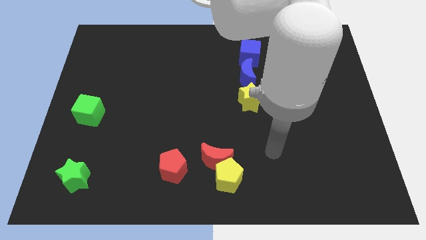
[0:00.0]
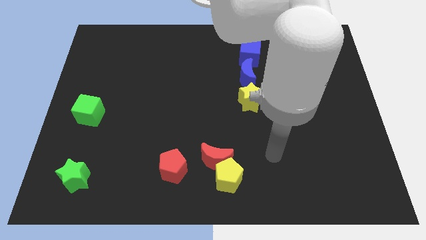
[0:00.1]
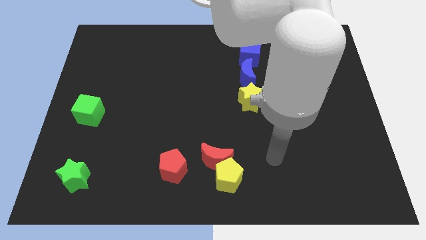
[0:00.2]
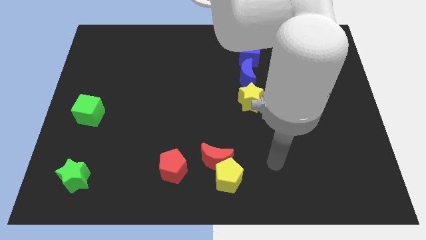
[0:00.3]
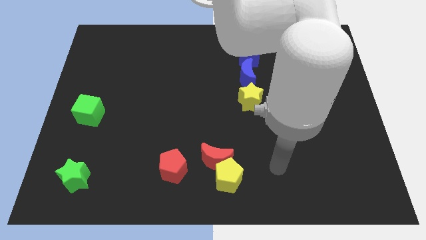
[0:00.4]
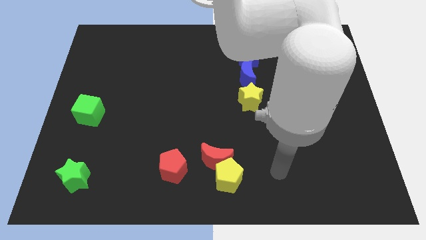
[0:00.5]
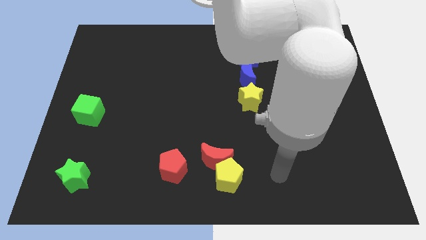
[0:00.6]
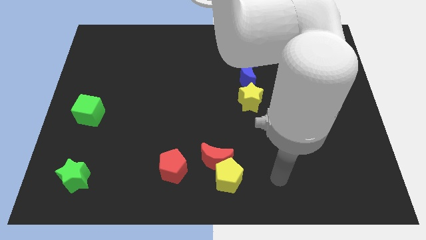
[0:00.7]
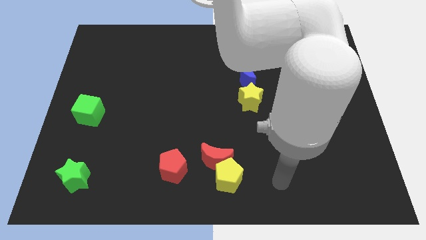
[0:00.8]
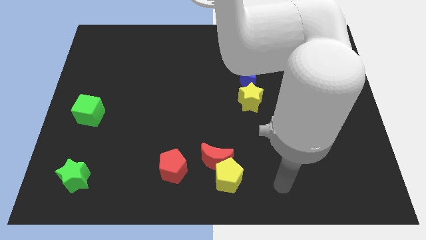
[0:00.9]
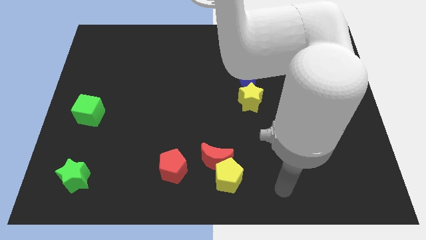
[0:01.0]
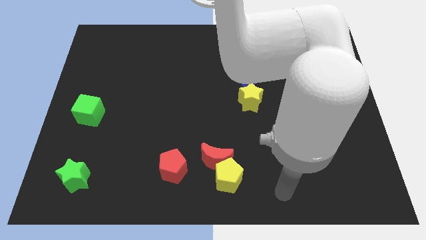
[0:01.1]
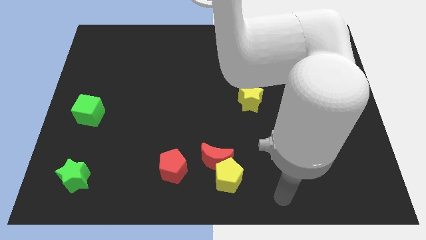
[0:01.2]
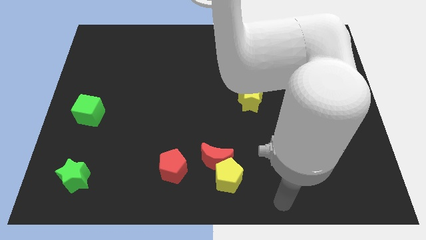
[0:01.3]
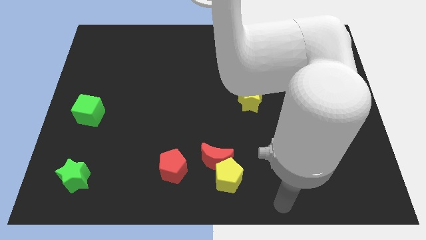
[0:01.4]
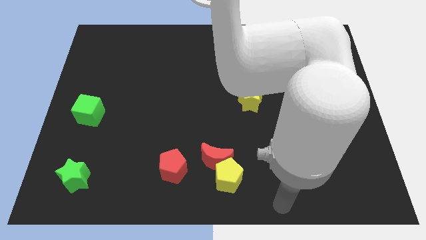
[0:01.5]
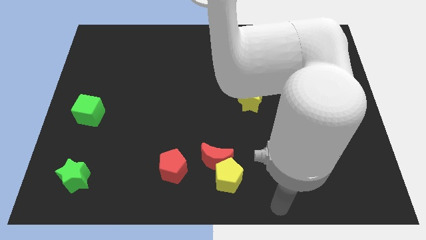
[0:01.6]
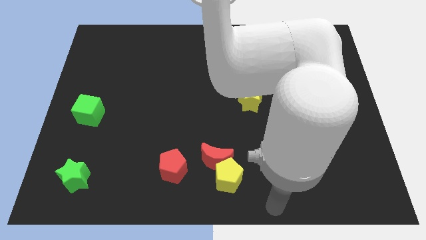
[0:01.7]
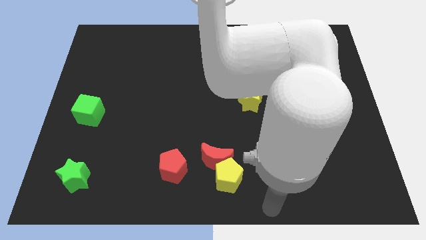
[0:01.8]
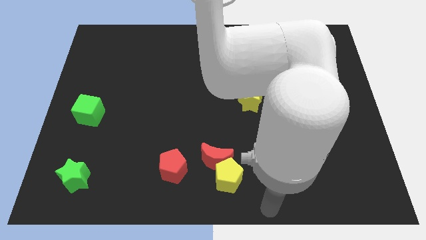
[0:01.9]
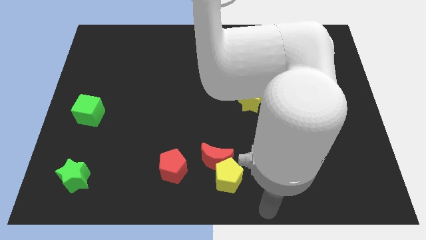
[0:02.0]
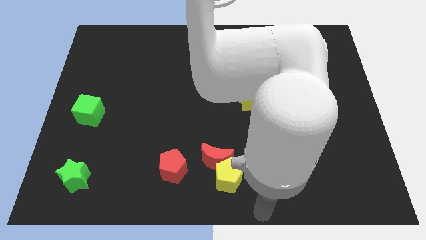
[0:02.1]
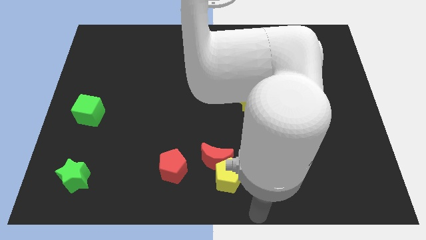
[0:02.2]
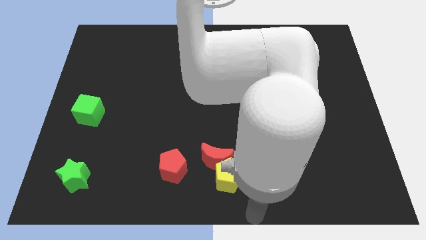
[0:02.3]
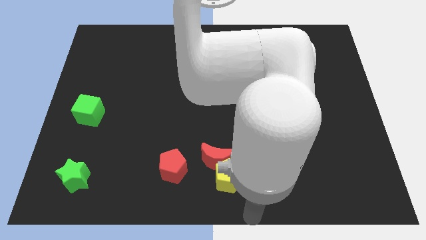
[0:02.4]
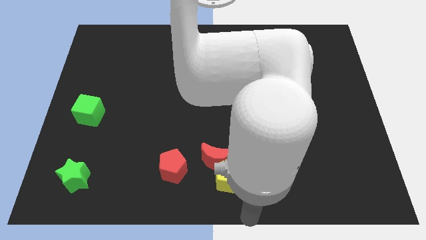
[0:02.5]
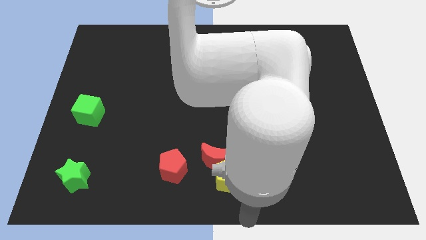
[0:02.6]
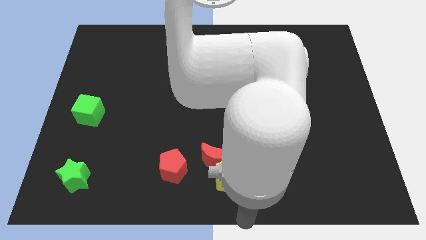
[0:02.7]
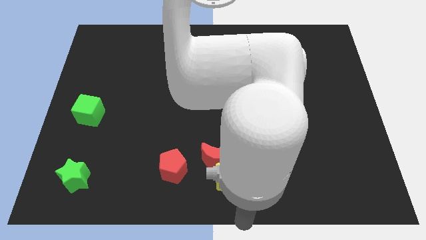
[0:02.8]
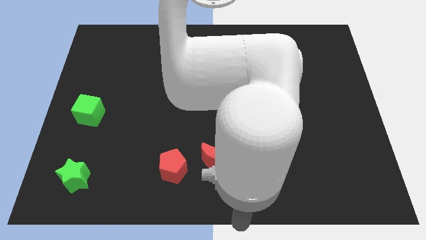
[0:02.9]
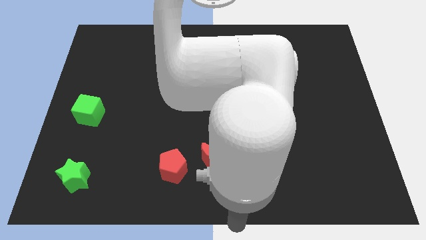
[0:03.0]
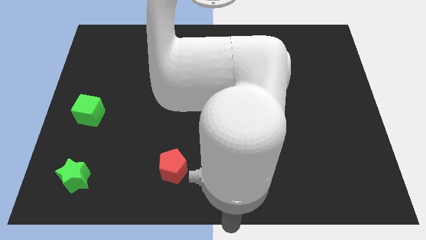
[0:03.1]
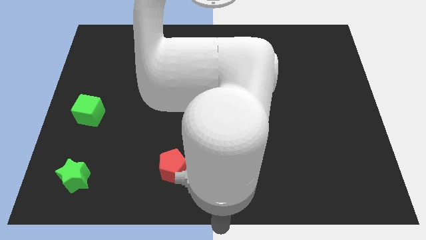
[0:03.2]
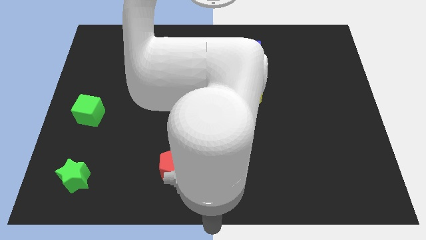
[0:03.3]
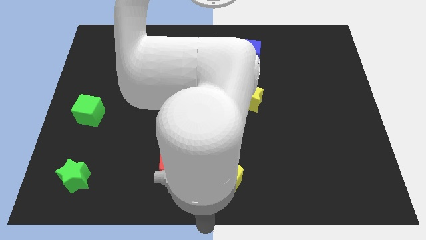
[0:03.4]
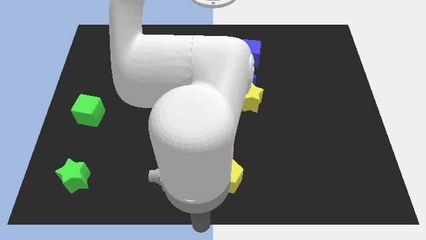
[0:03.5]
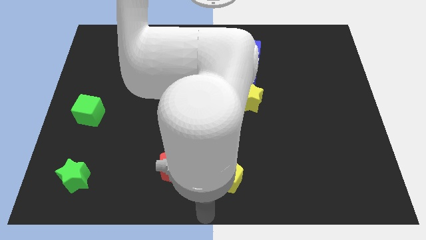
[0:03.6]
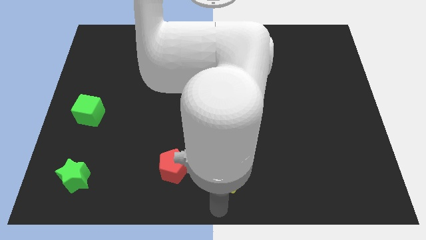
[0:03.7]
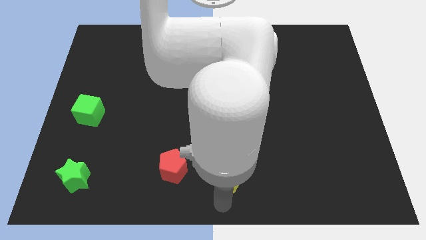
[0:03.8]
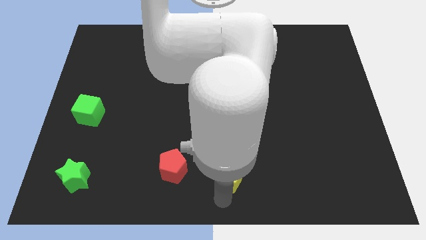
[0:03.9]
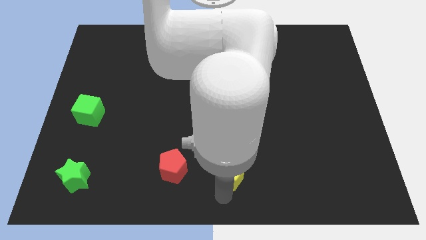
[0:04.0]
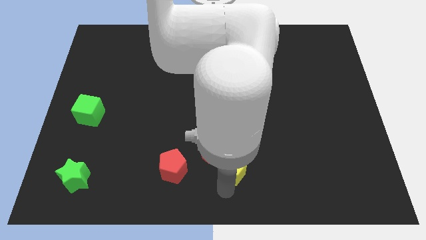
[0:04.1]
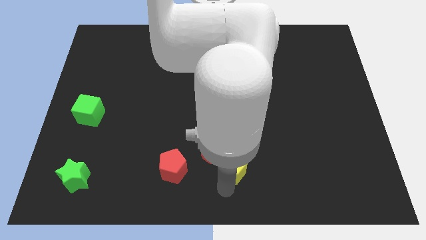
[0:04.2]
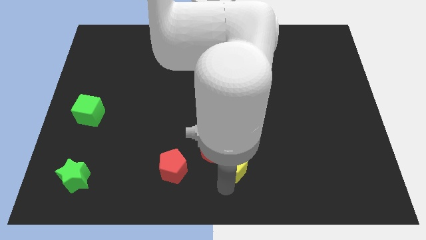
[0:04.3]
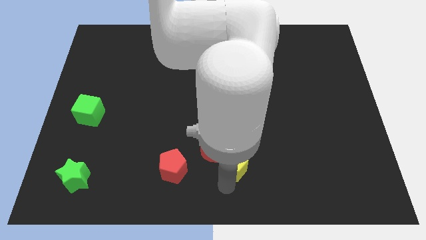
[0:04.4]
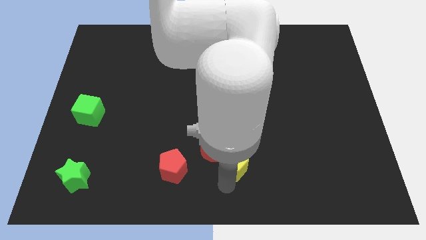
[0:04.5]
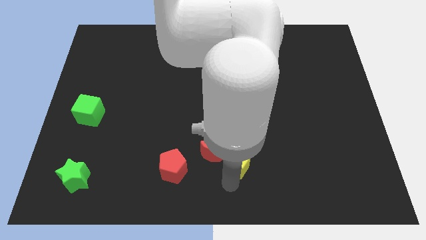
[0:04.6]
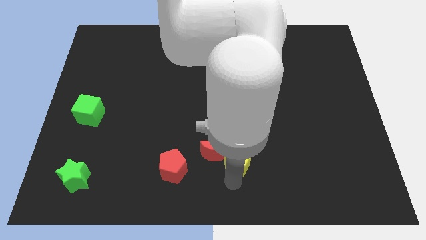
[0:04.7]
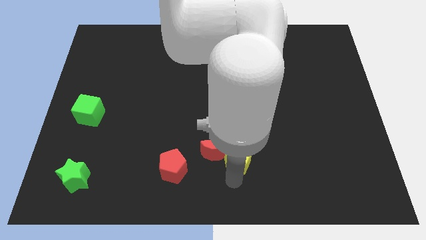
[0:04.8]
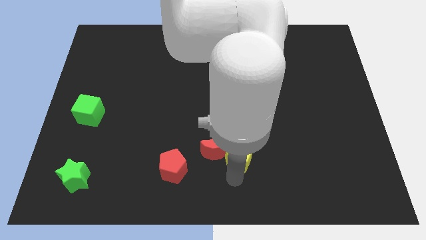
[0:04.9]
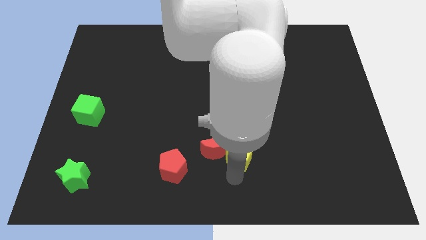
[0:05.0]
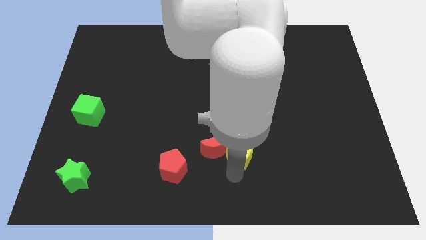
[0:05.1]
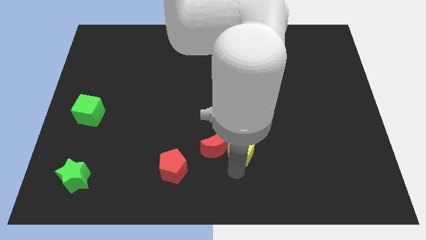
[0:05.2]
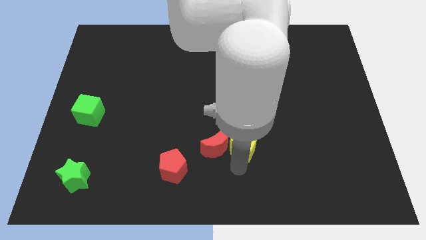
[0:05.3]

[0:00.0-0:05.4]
move the yellow pentagon to the right side of the red moon

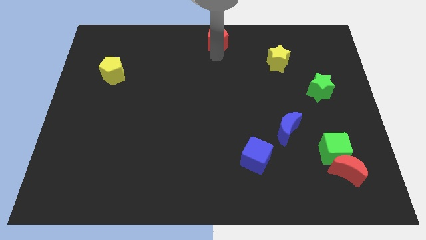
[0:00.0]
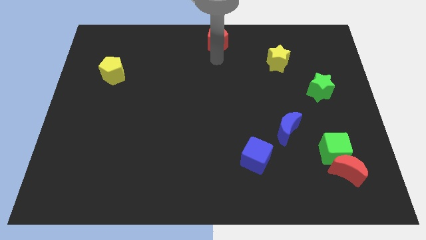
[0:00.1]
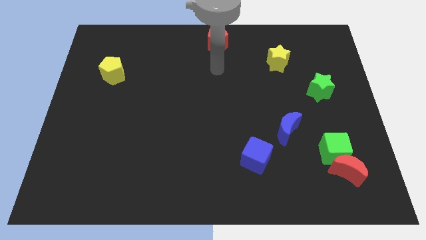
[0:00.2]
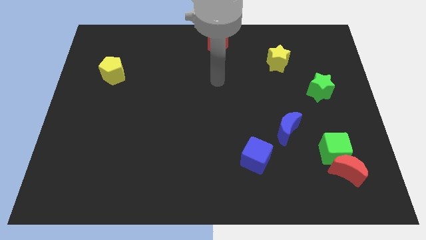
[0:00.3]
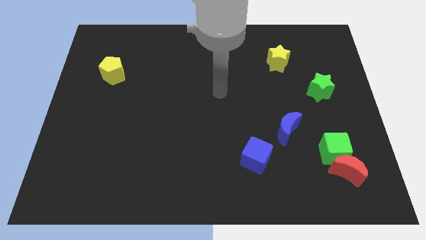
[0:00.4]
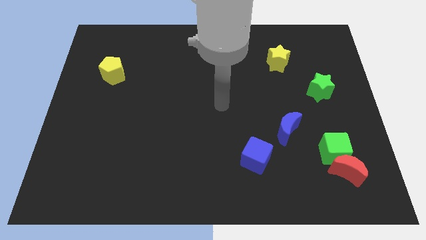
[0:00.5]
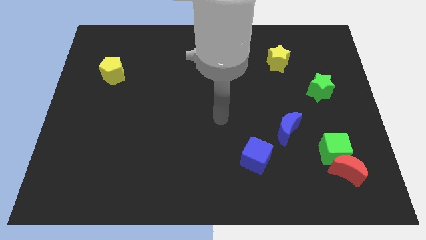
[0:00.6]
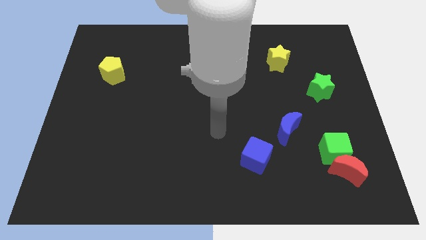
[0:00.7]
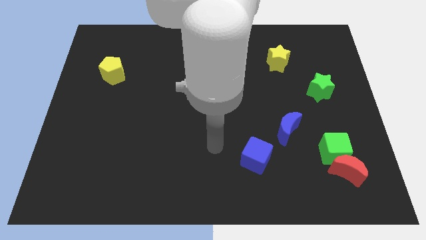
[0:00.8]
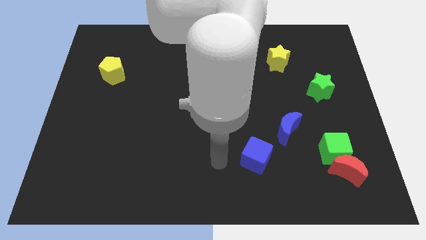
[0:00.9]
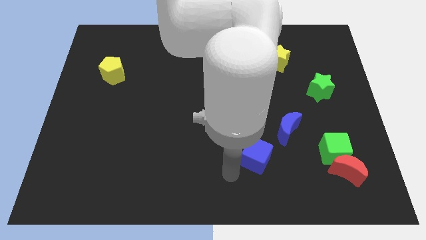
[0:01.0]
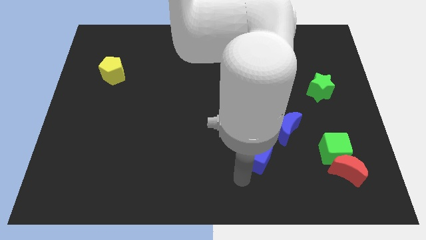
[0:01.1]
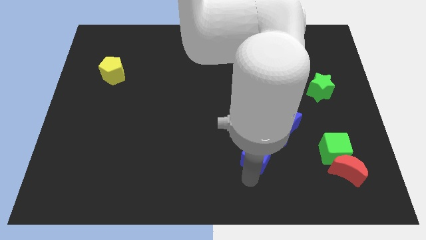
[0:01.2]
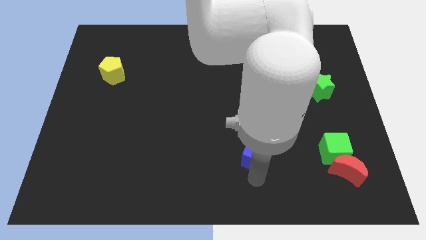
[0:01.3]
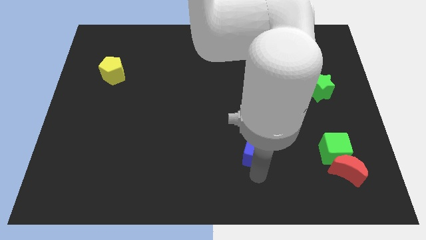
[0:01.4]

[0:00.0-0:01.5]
place your arm to the bottom of the blue cube

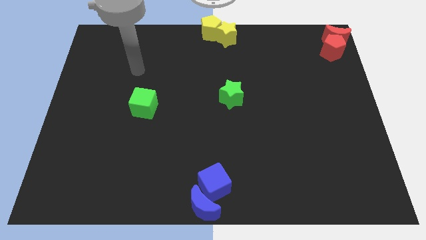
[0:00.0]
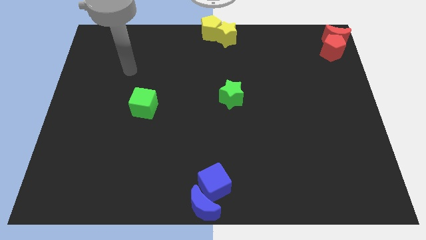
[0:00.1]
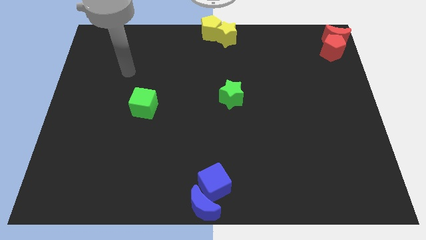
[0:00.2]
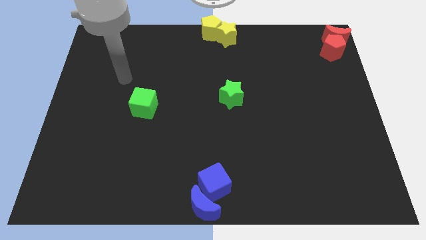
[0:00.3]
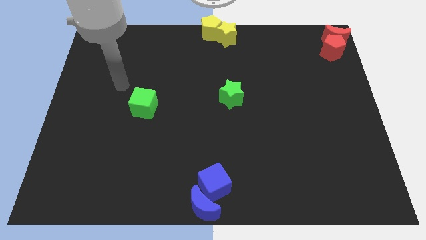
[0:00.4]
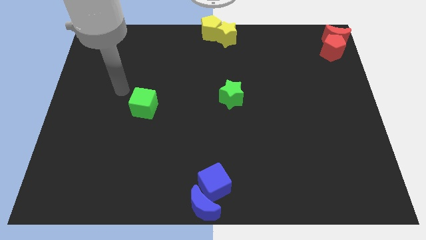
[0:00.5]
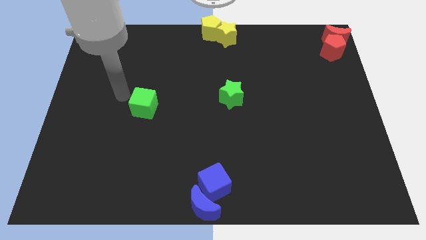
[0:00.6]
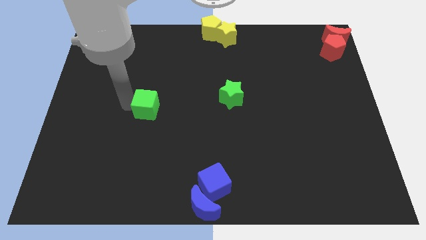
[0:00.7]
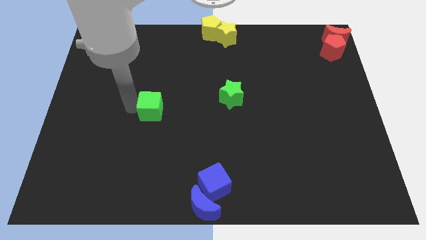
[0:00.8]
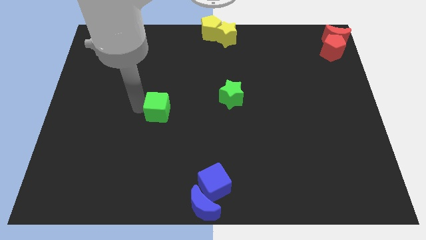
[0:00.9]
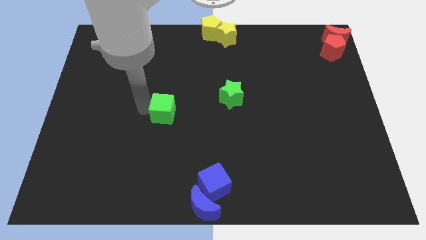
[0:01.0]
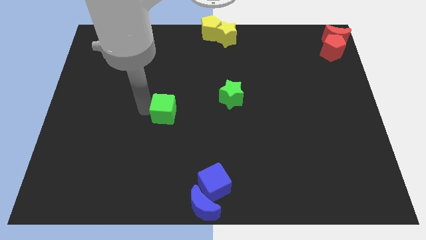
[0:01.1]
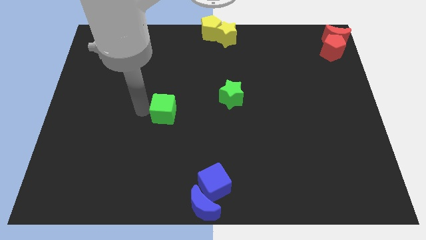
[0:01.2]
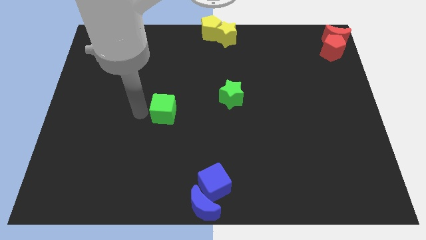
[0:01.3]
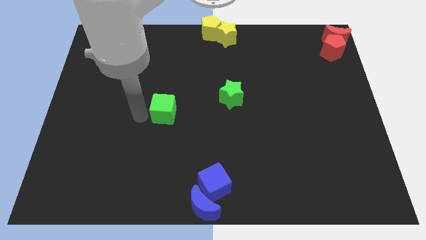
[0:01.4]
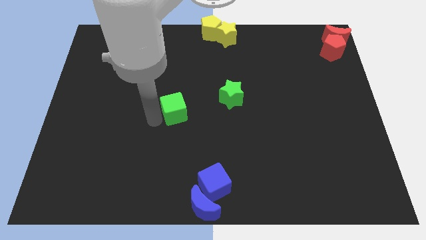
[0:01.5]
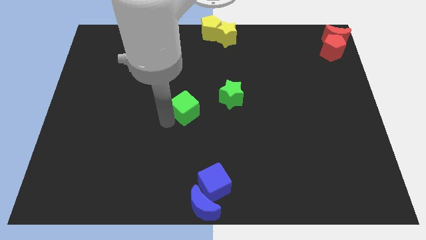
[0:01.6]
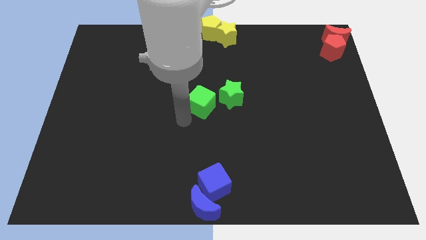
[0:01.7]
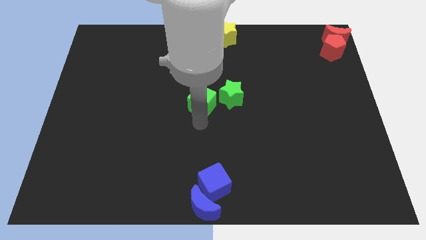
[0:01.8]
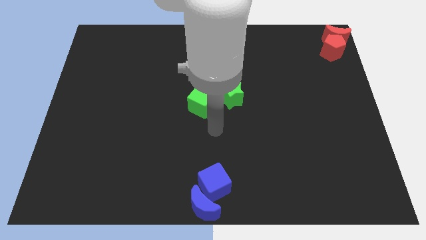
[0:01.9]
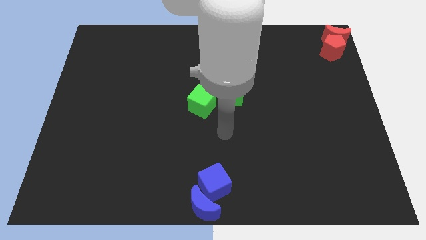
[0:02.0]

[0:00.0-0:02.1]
move the green cube to the left side of the green star

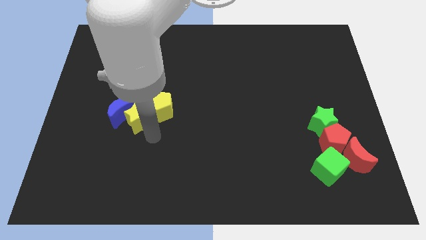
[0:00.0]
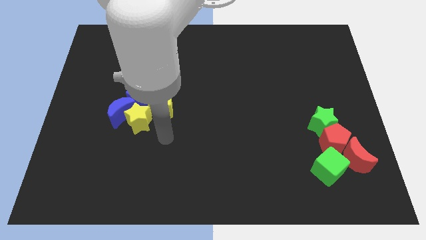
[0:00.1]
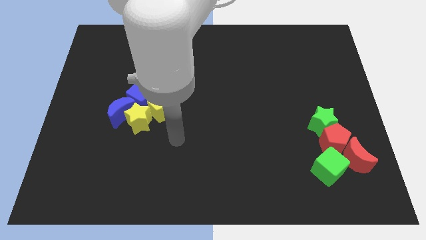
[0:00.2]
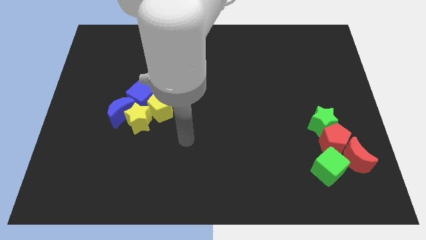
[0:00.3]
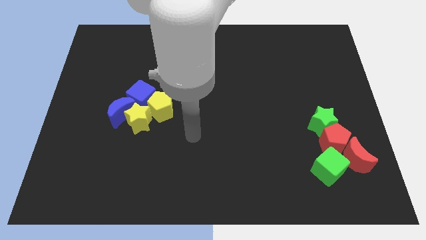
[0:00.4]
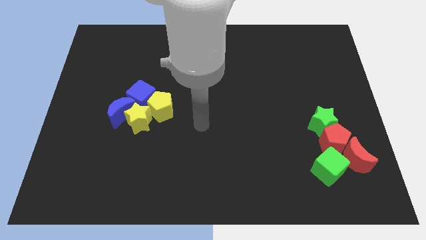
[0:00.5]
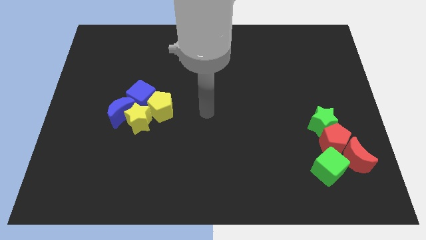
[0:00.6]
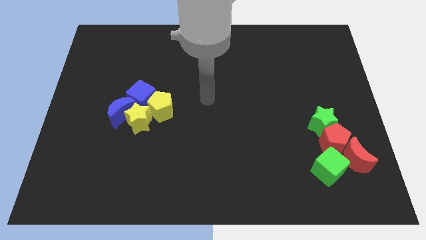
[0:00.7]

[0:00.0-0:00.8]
go away from the yellow star
